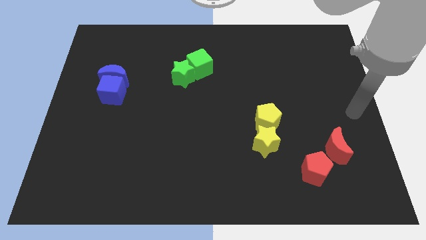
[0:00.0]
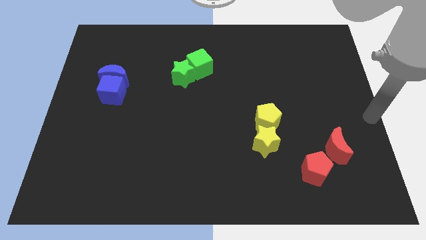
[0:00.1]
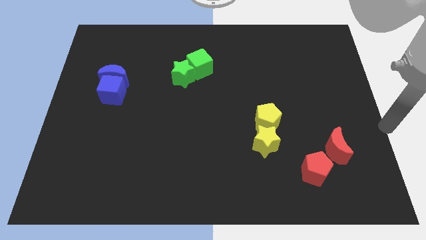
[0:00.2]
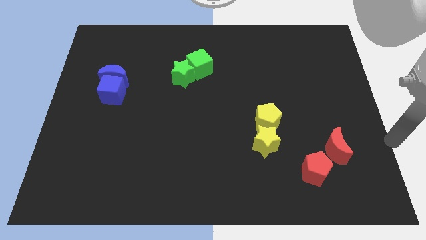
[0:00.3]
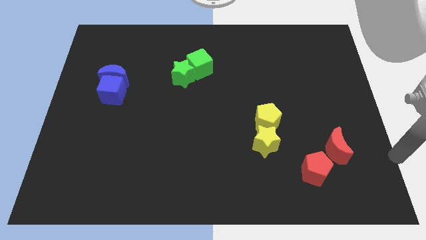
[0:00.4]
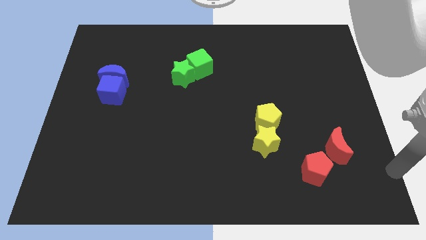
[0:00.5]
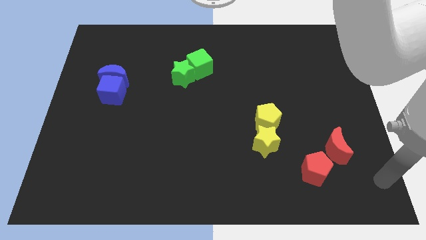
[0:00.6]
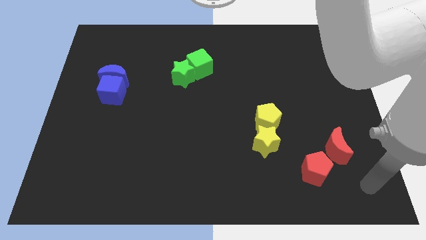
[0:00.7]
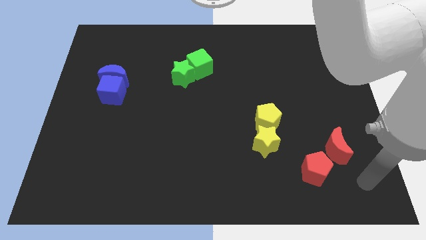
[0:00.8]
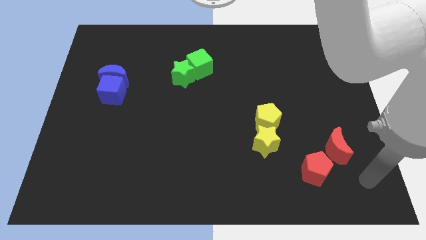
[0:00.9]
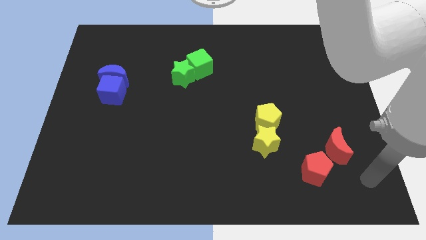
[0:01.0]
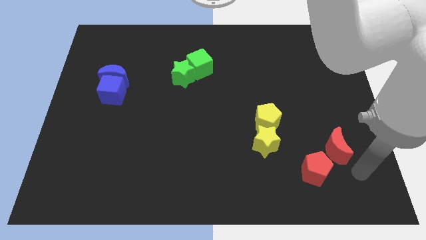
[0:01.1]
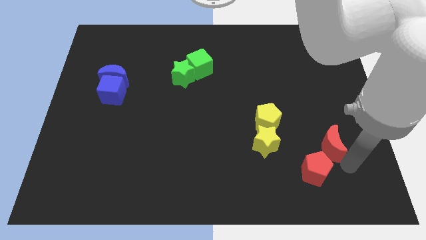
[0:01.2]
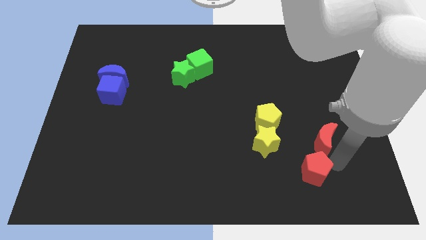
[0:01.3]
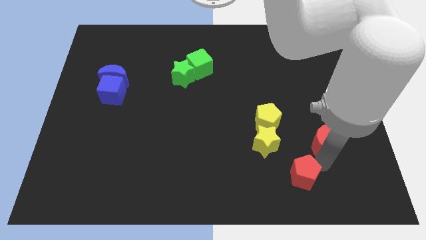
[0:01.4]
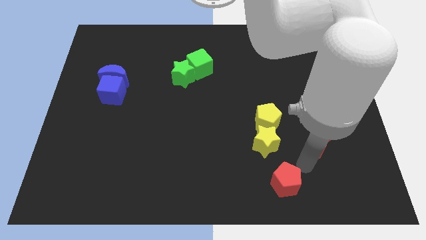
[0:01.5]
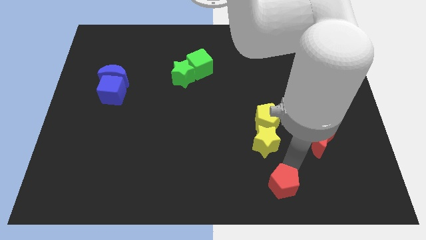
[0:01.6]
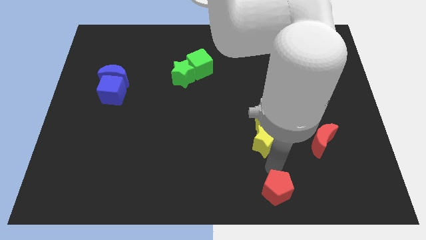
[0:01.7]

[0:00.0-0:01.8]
separate the red pentagon from the red crescent

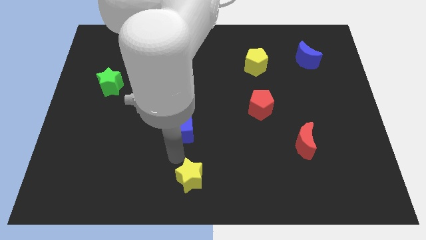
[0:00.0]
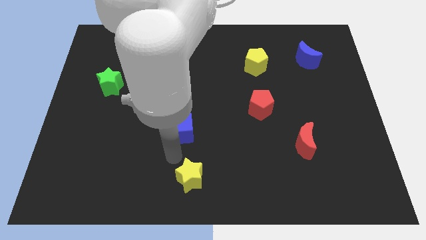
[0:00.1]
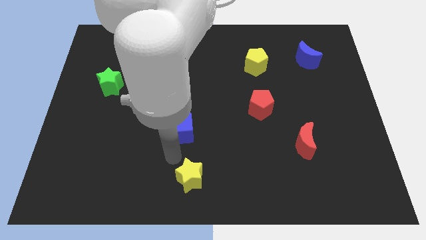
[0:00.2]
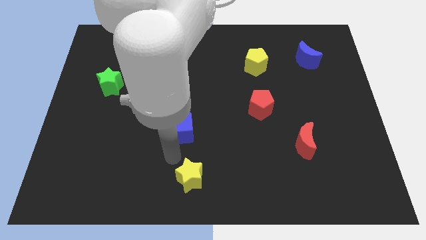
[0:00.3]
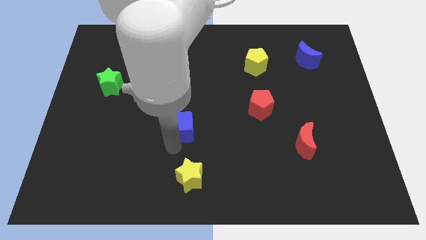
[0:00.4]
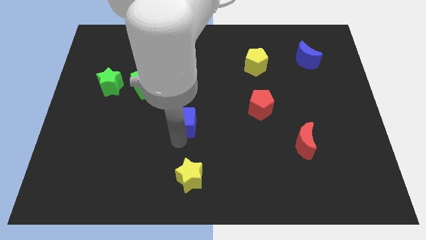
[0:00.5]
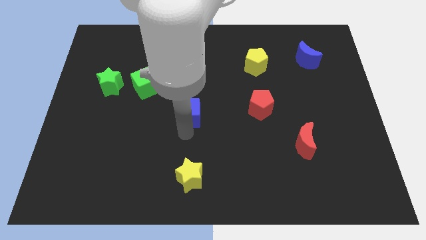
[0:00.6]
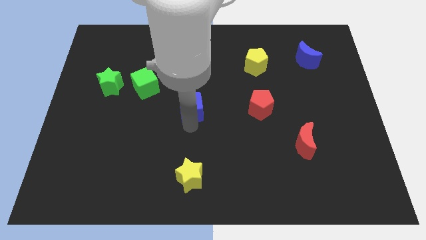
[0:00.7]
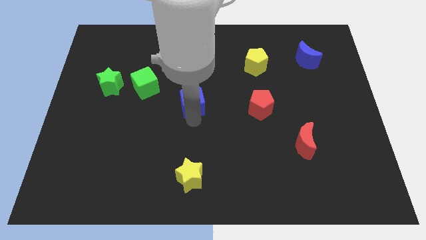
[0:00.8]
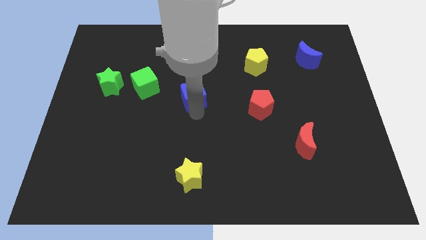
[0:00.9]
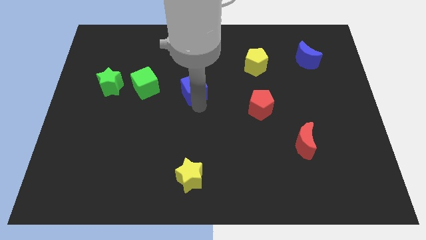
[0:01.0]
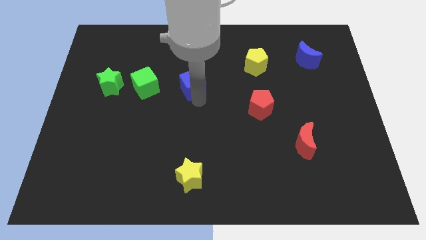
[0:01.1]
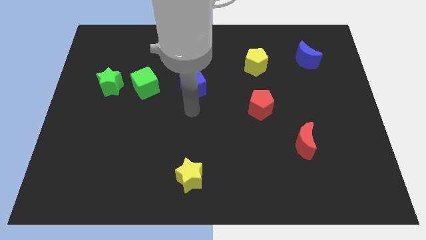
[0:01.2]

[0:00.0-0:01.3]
place blue cube to the right of green cube

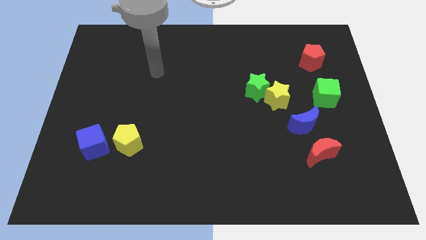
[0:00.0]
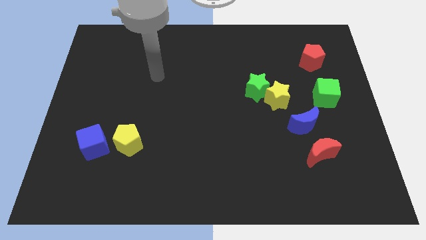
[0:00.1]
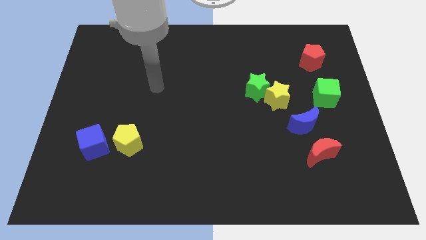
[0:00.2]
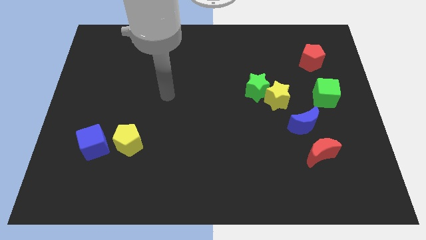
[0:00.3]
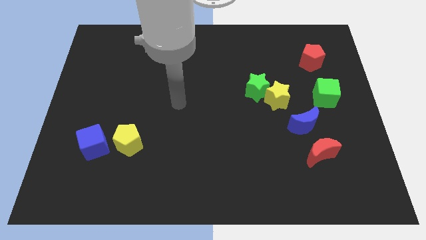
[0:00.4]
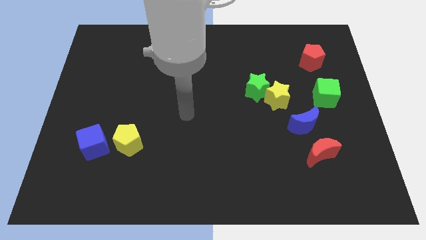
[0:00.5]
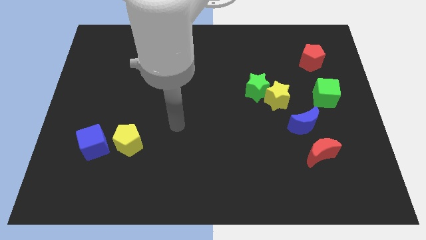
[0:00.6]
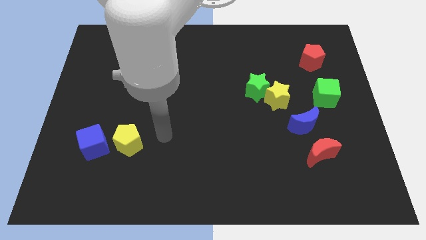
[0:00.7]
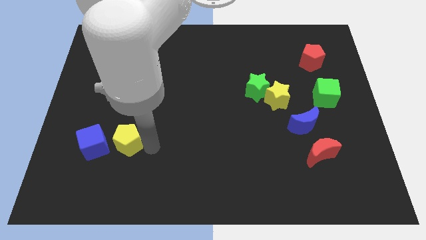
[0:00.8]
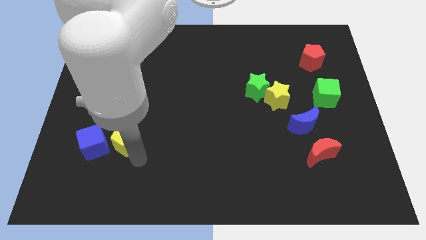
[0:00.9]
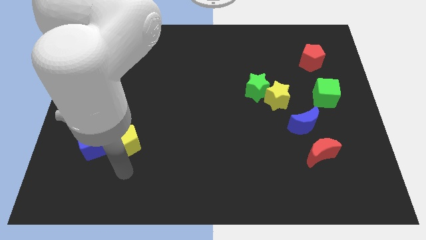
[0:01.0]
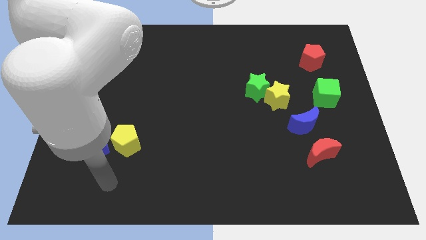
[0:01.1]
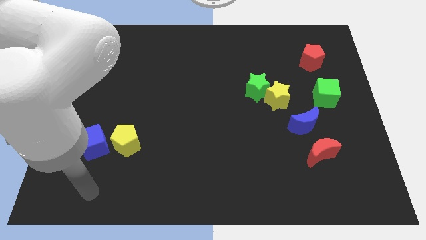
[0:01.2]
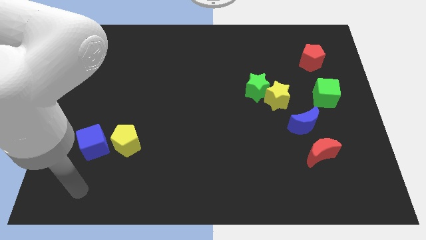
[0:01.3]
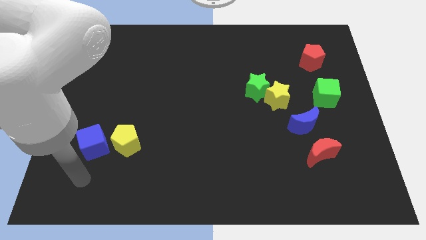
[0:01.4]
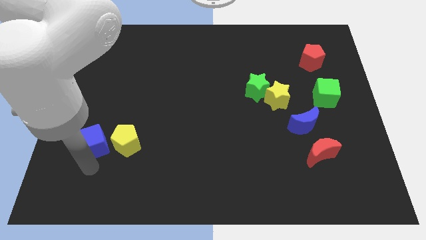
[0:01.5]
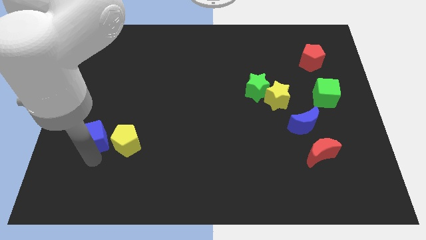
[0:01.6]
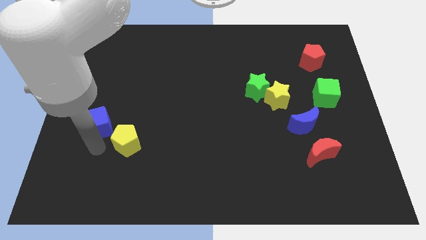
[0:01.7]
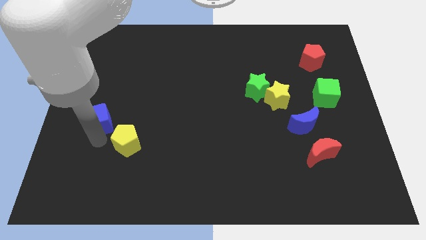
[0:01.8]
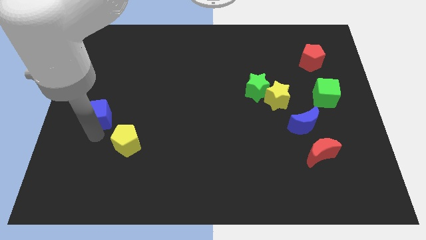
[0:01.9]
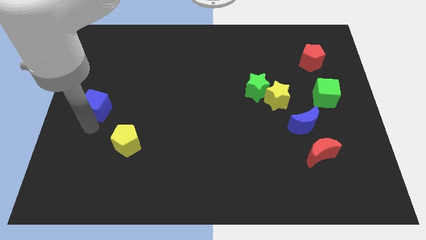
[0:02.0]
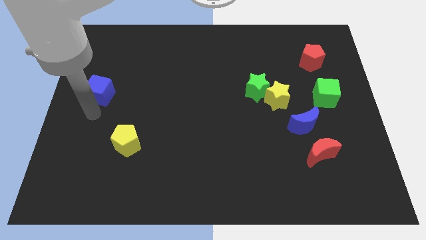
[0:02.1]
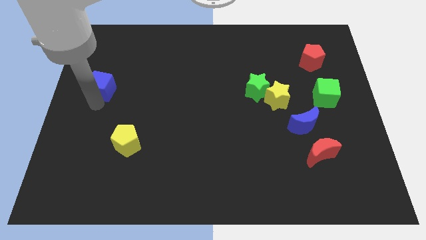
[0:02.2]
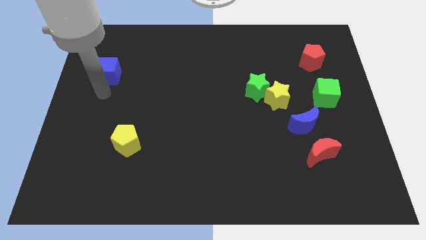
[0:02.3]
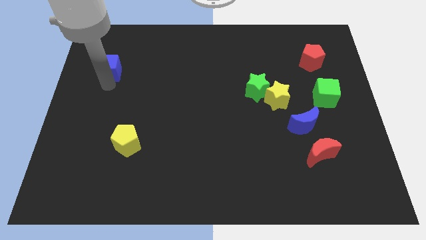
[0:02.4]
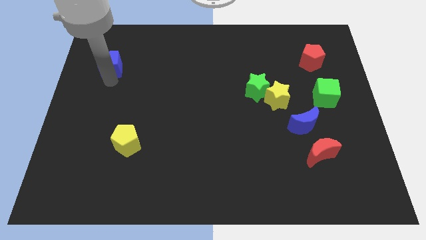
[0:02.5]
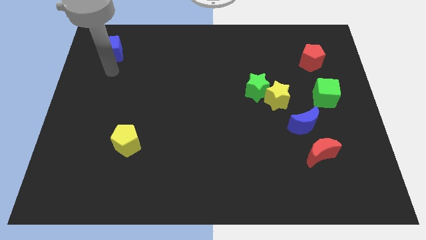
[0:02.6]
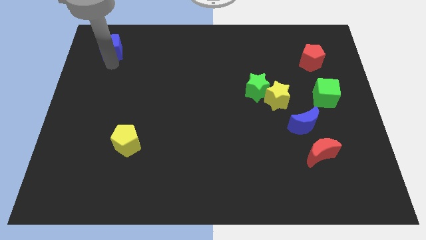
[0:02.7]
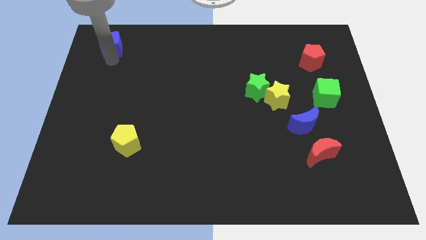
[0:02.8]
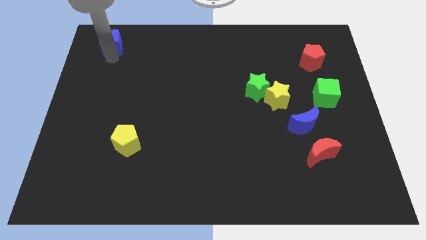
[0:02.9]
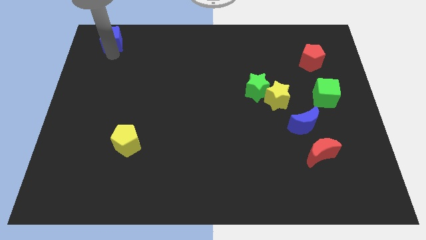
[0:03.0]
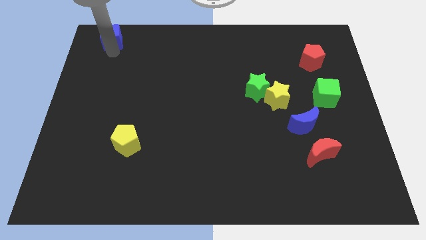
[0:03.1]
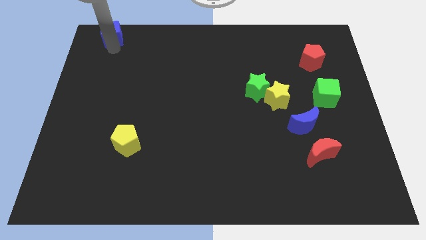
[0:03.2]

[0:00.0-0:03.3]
separate blue cube from yellow pentagon

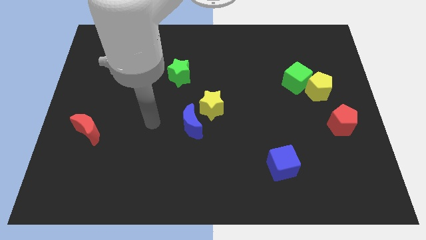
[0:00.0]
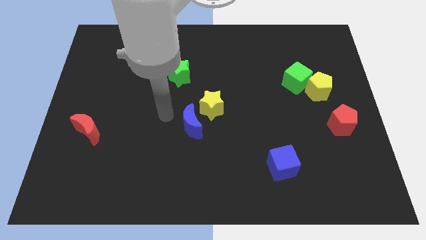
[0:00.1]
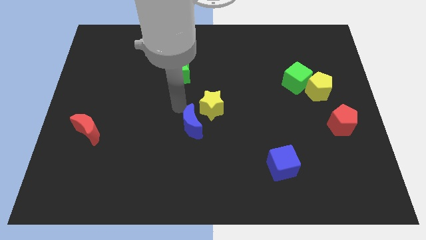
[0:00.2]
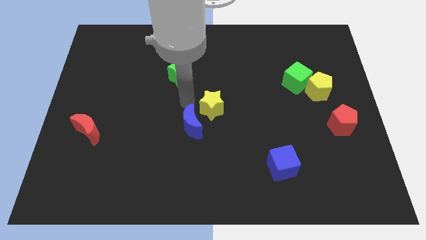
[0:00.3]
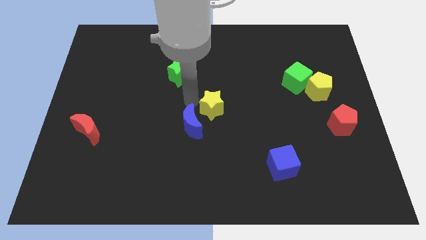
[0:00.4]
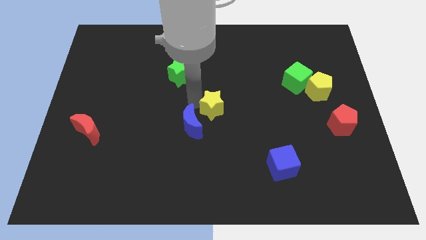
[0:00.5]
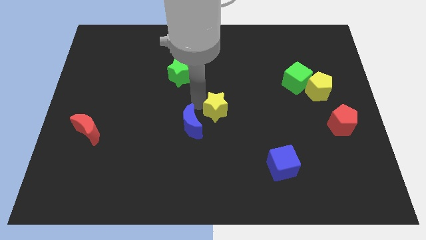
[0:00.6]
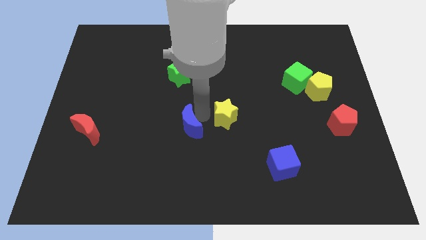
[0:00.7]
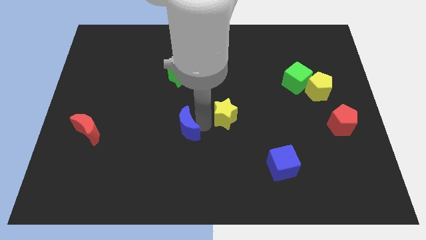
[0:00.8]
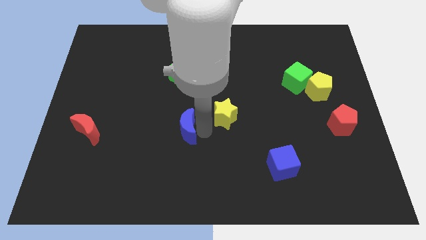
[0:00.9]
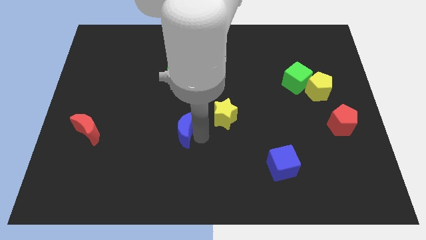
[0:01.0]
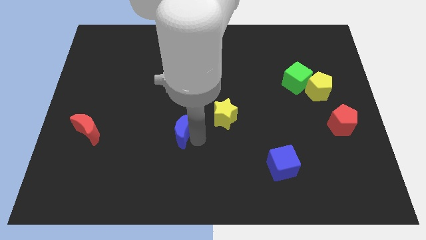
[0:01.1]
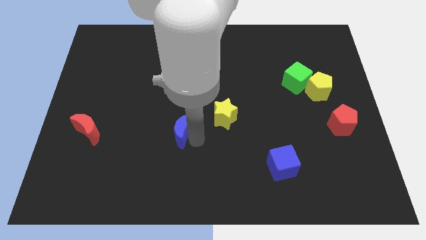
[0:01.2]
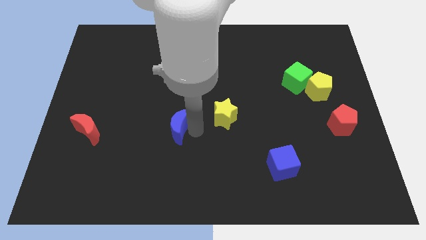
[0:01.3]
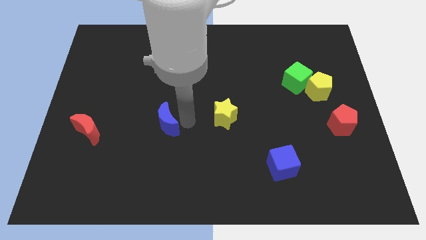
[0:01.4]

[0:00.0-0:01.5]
place the blue moon in between the yellow star and red moon

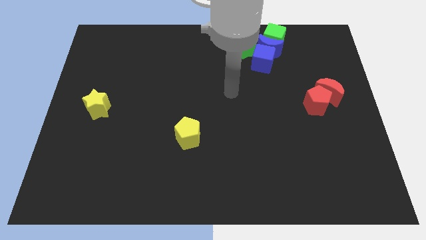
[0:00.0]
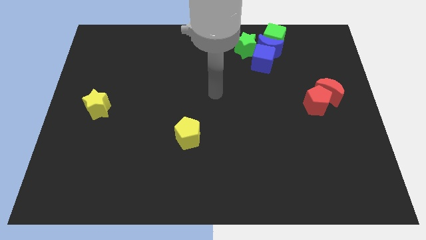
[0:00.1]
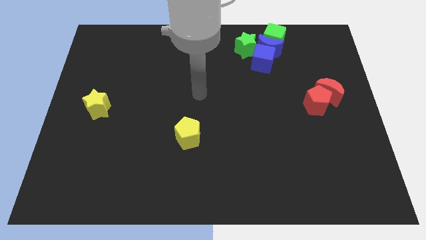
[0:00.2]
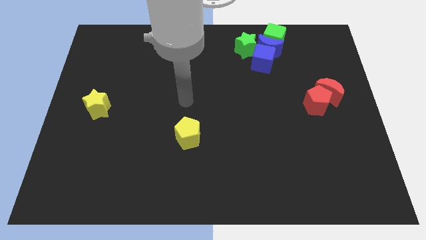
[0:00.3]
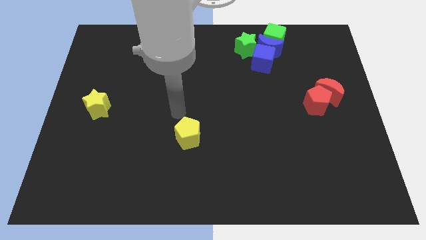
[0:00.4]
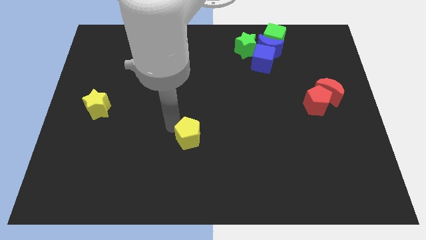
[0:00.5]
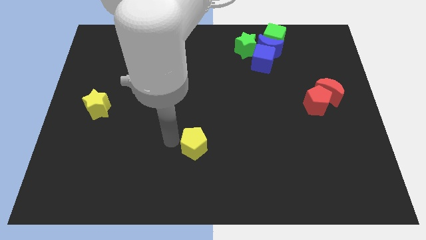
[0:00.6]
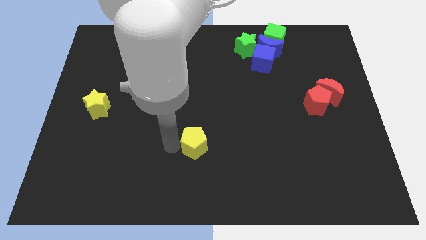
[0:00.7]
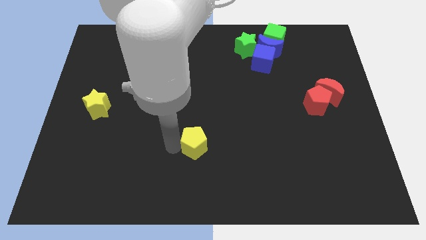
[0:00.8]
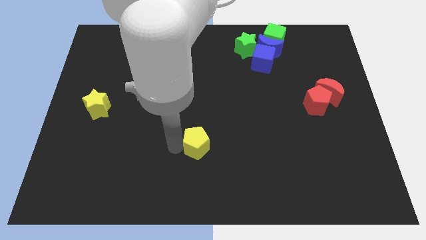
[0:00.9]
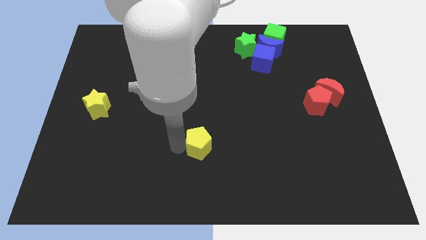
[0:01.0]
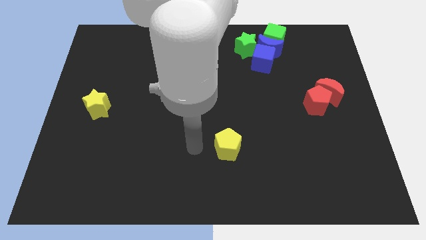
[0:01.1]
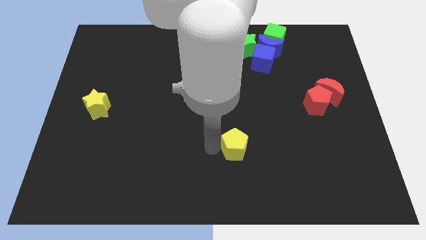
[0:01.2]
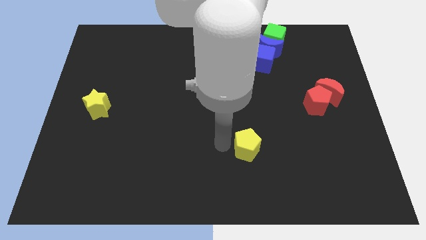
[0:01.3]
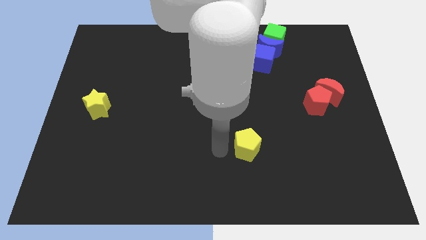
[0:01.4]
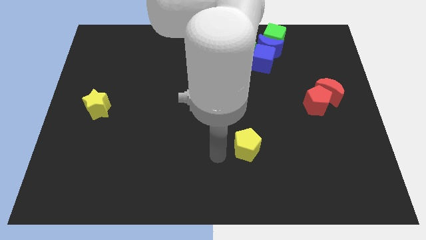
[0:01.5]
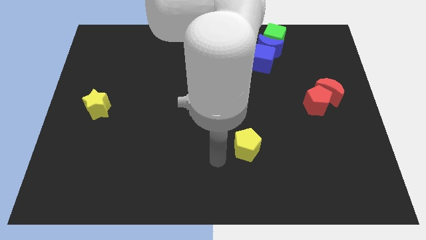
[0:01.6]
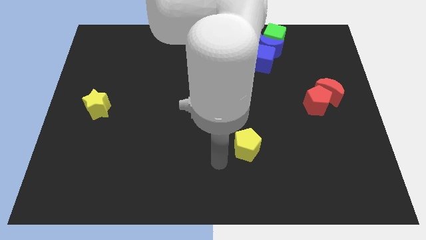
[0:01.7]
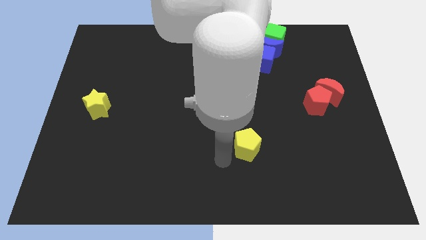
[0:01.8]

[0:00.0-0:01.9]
place the yellow pentagon below the blue cube
